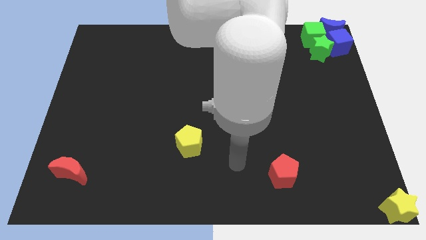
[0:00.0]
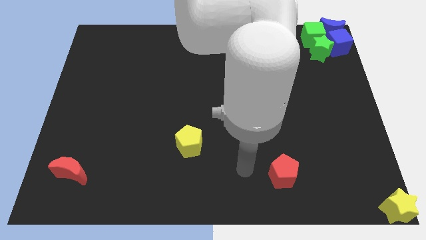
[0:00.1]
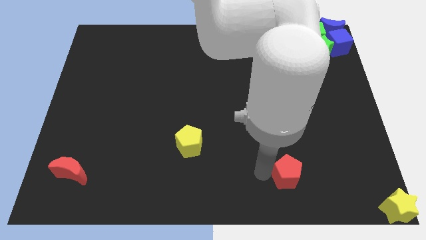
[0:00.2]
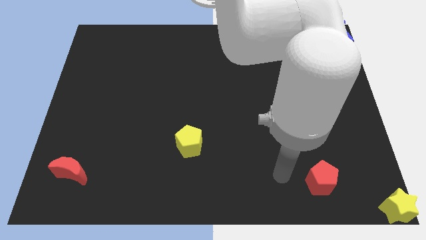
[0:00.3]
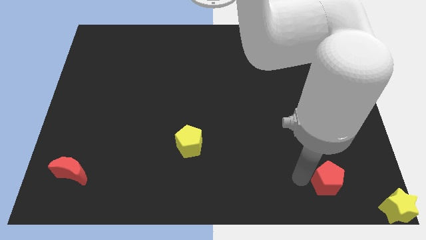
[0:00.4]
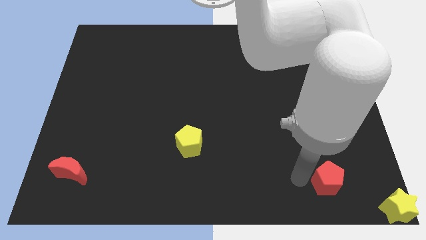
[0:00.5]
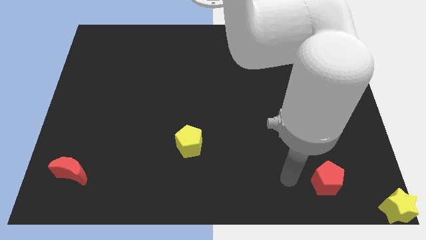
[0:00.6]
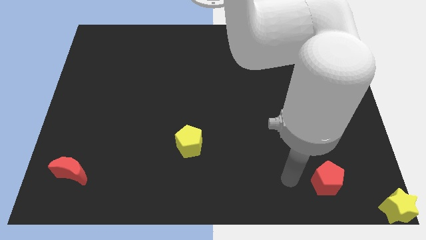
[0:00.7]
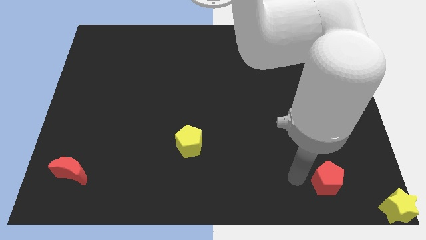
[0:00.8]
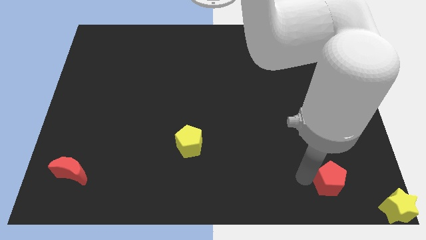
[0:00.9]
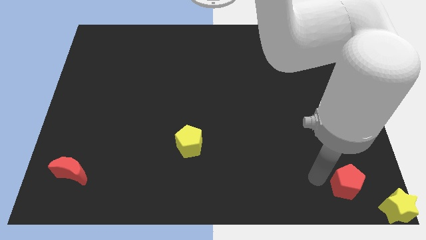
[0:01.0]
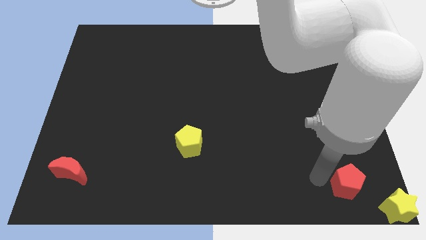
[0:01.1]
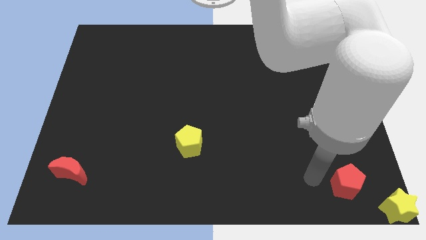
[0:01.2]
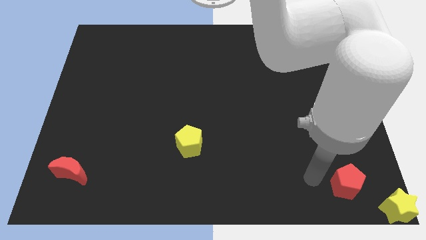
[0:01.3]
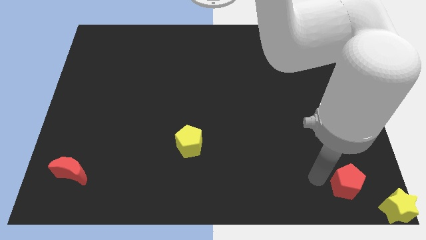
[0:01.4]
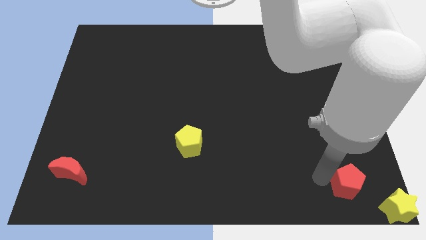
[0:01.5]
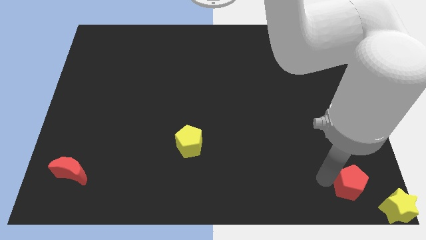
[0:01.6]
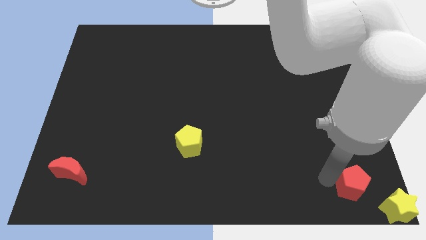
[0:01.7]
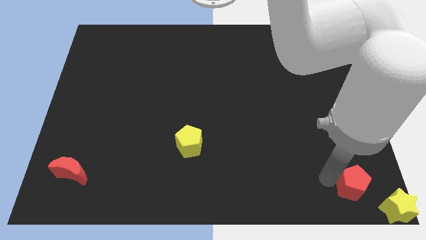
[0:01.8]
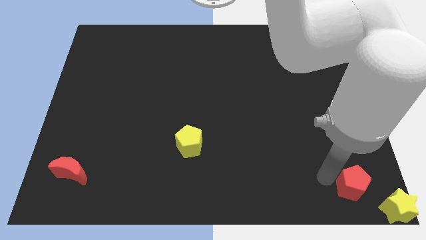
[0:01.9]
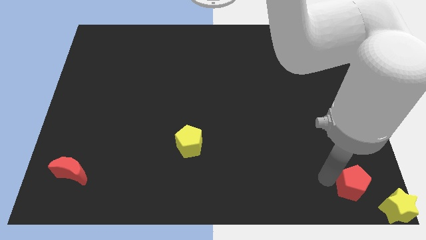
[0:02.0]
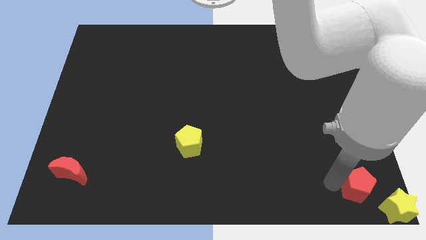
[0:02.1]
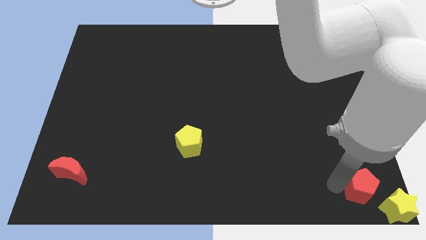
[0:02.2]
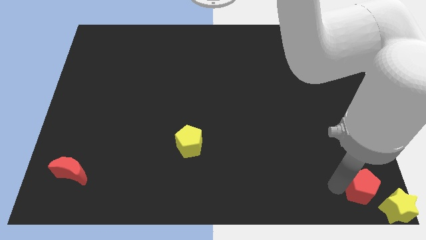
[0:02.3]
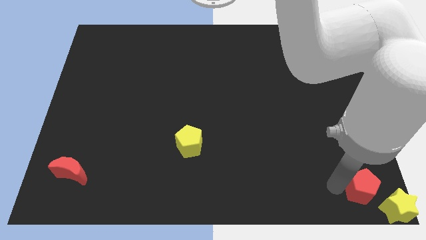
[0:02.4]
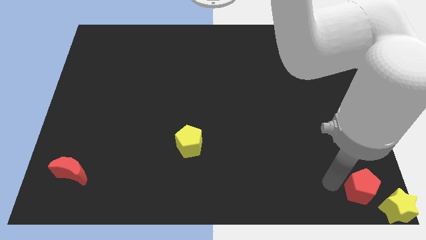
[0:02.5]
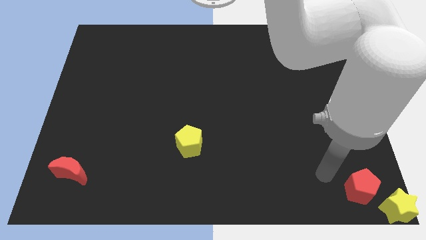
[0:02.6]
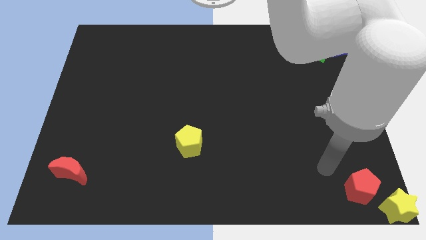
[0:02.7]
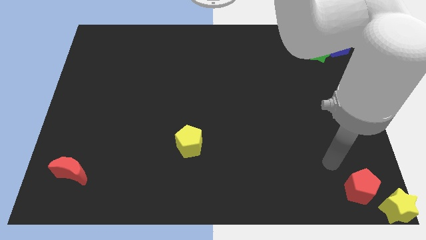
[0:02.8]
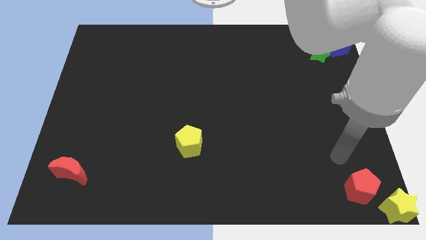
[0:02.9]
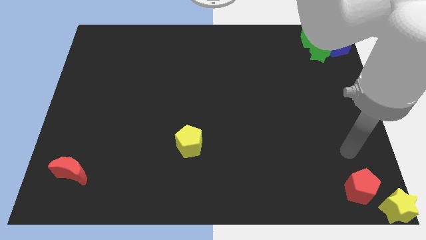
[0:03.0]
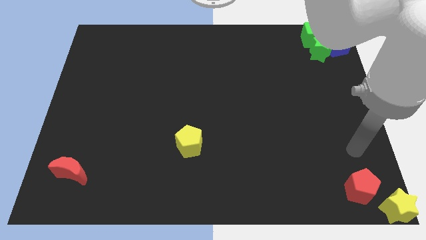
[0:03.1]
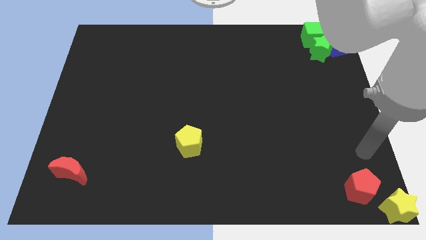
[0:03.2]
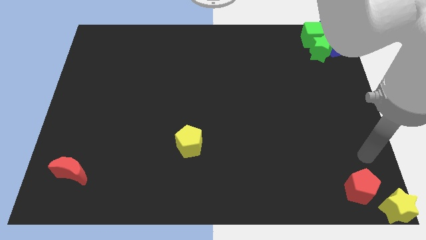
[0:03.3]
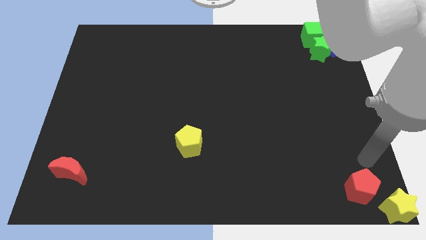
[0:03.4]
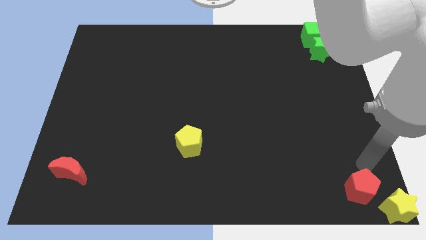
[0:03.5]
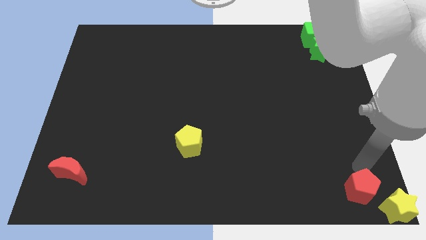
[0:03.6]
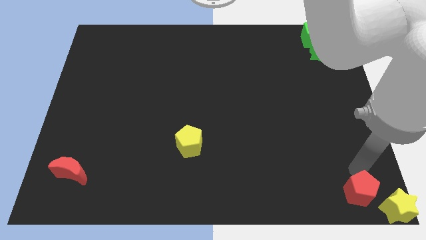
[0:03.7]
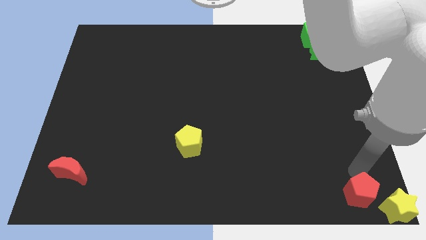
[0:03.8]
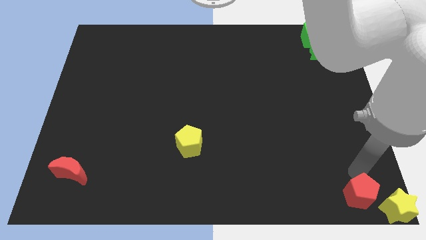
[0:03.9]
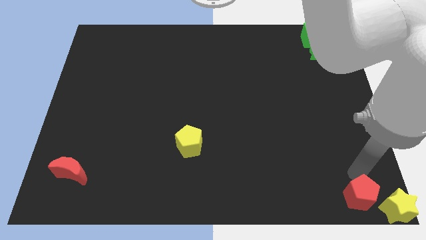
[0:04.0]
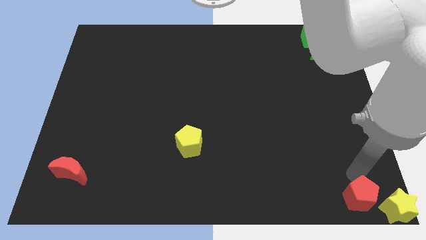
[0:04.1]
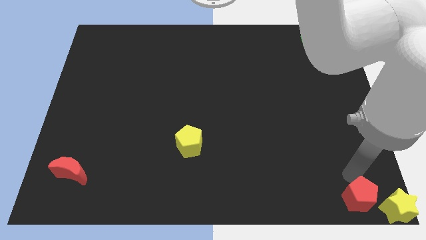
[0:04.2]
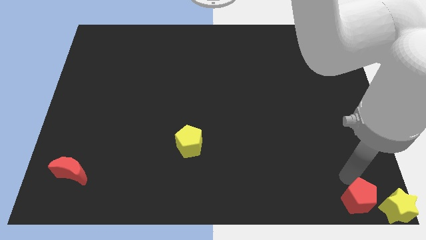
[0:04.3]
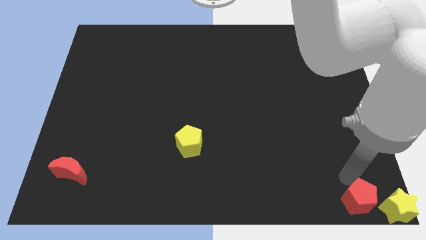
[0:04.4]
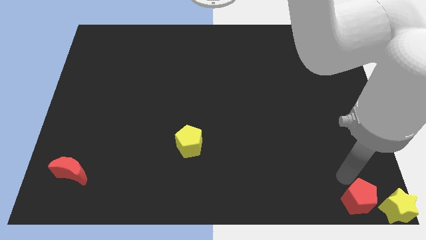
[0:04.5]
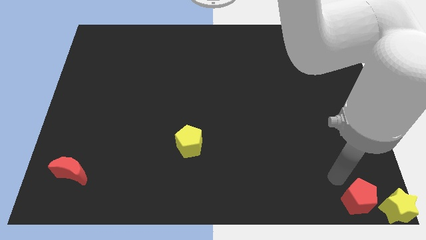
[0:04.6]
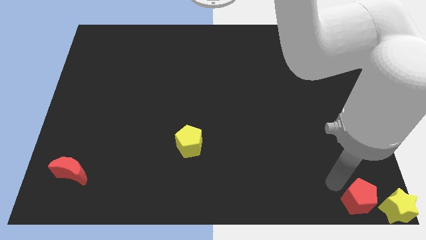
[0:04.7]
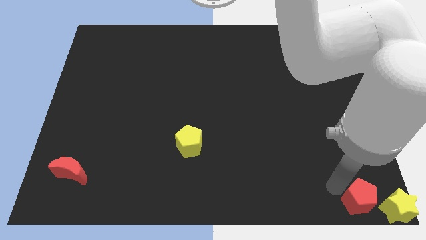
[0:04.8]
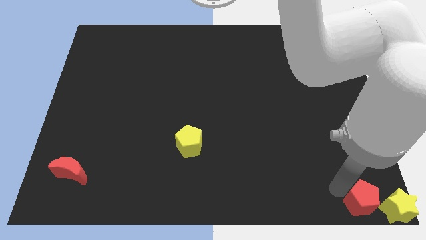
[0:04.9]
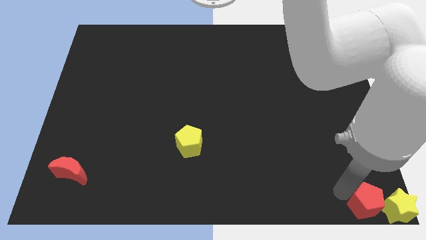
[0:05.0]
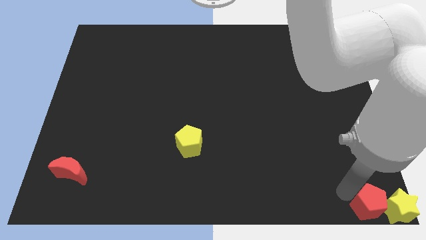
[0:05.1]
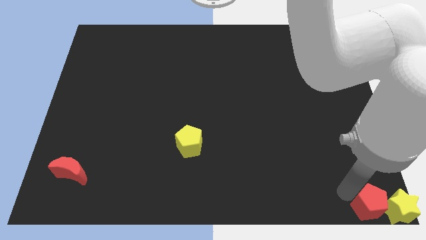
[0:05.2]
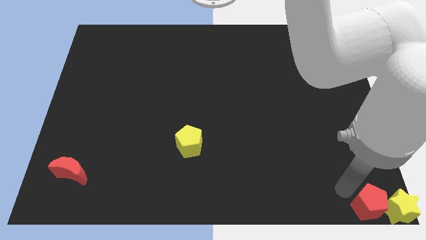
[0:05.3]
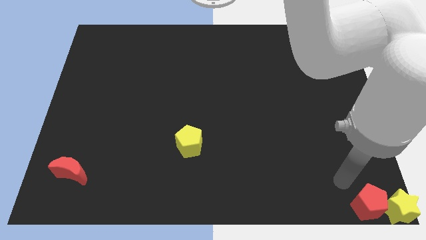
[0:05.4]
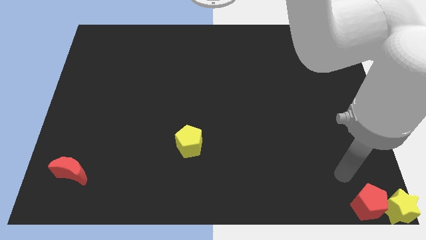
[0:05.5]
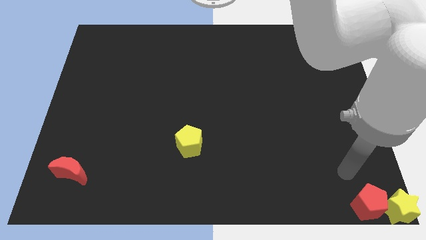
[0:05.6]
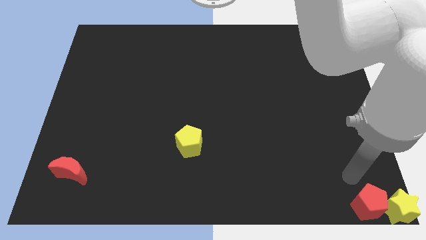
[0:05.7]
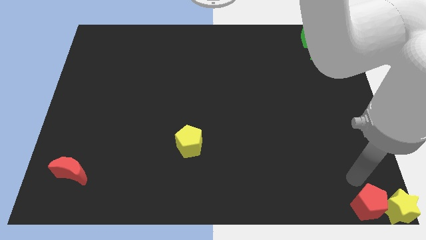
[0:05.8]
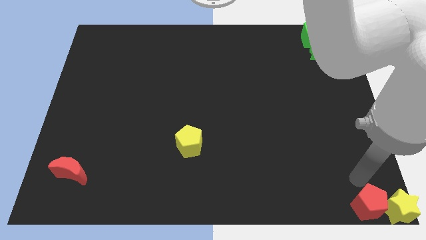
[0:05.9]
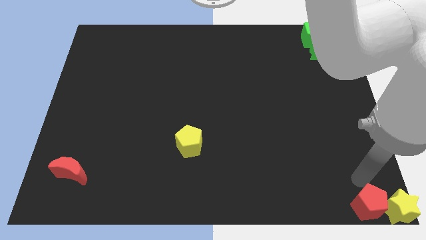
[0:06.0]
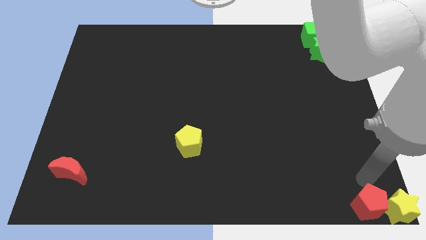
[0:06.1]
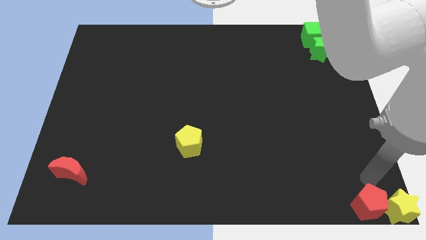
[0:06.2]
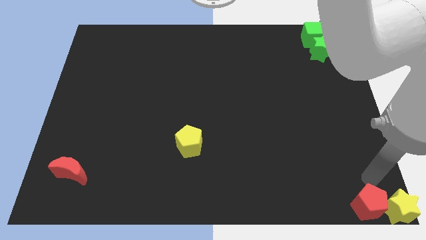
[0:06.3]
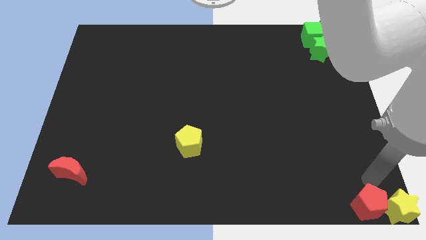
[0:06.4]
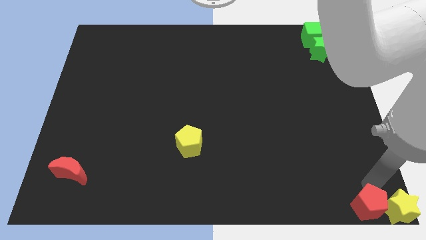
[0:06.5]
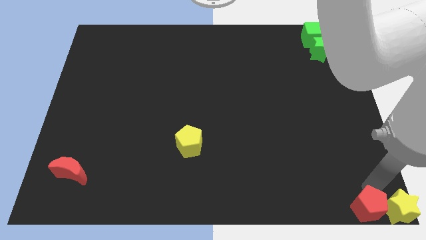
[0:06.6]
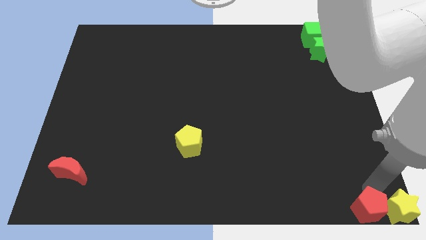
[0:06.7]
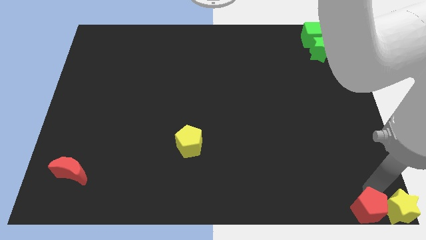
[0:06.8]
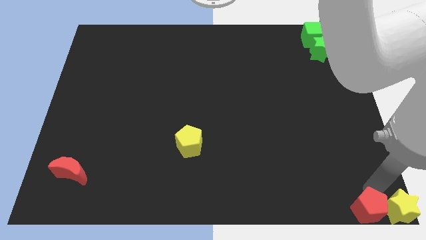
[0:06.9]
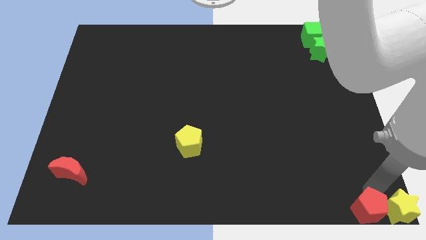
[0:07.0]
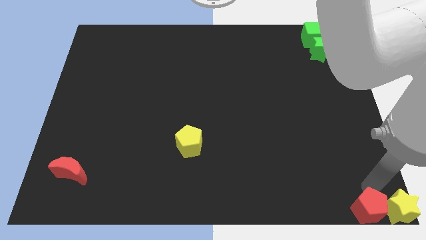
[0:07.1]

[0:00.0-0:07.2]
place the red pentagon left to the yellow star

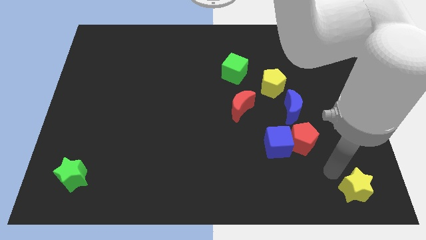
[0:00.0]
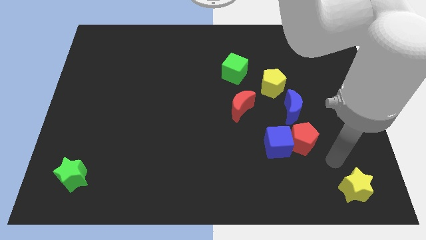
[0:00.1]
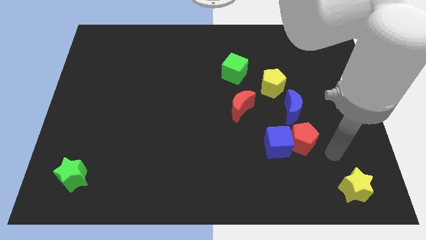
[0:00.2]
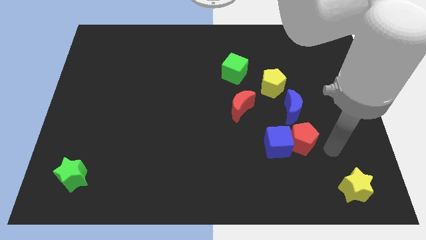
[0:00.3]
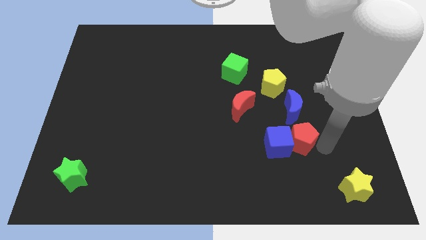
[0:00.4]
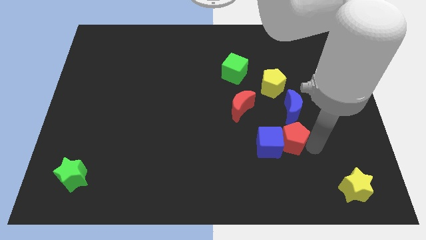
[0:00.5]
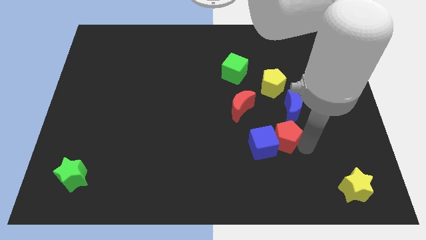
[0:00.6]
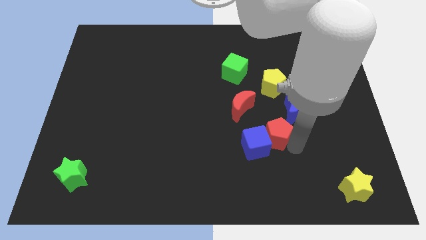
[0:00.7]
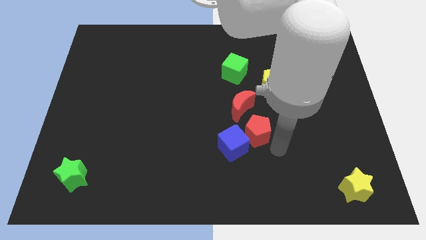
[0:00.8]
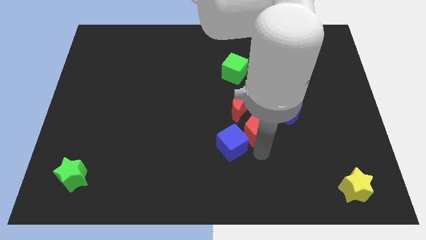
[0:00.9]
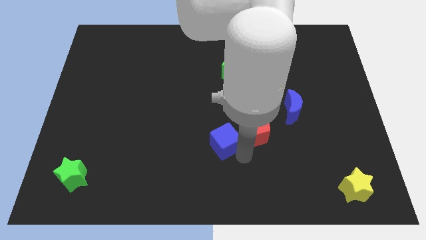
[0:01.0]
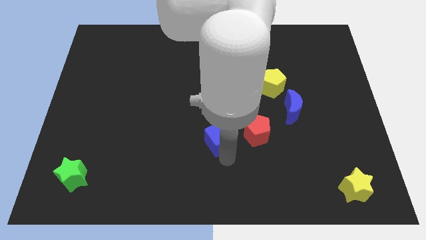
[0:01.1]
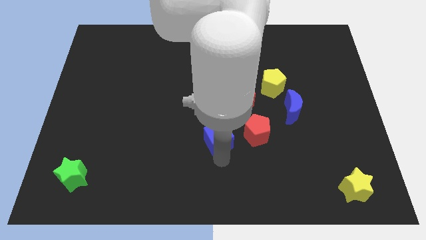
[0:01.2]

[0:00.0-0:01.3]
move the blue cube to the bottom center of the center

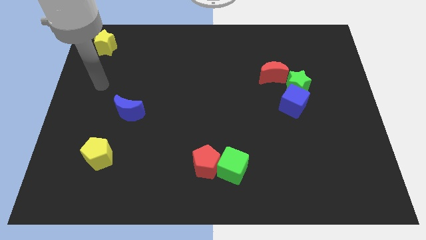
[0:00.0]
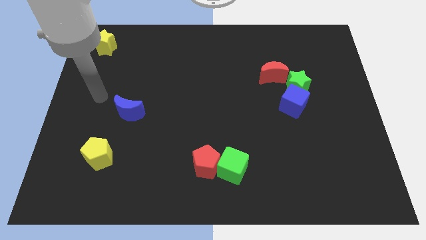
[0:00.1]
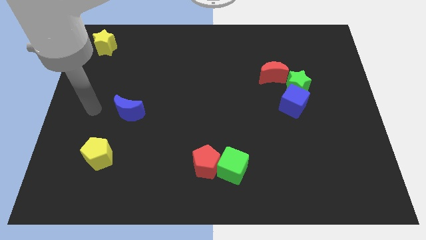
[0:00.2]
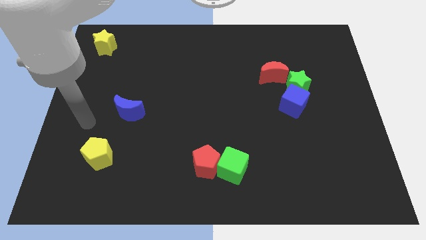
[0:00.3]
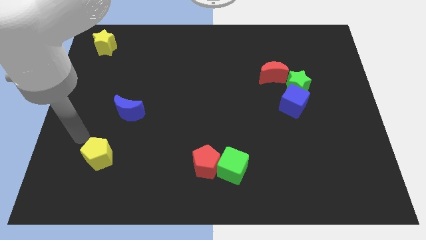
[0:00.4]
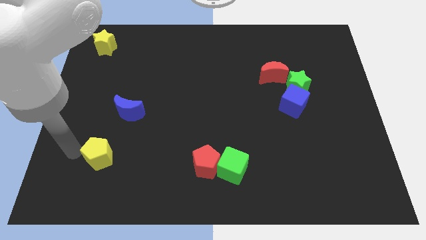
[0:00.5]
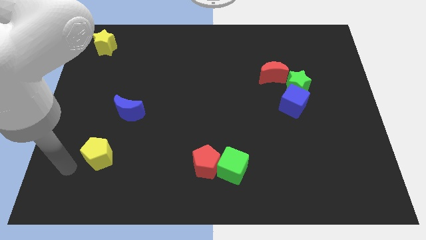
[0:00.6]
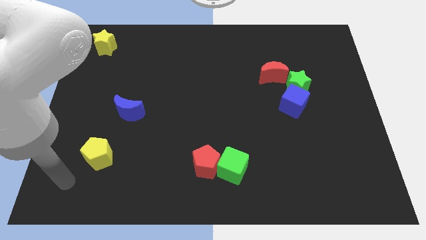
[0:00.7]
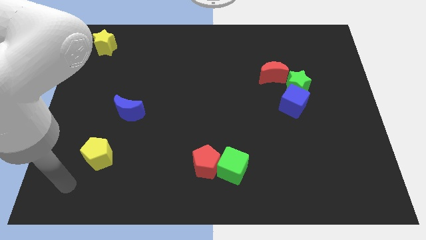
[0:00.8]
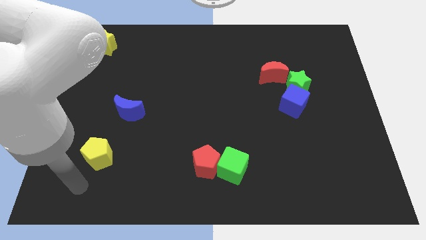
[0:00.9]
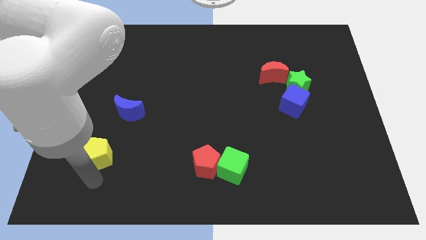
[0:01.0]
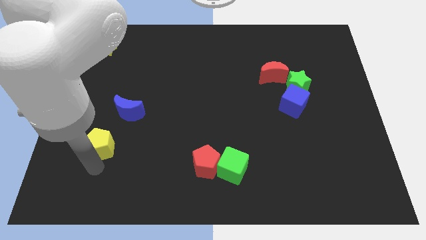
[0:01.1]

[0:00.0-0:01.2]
touch the bottom of yellow pentagon
